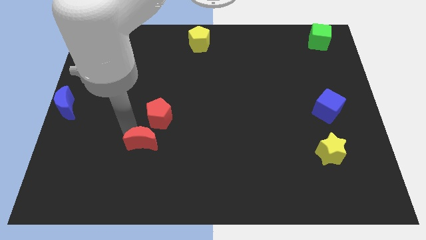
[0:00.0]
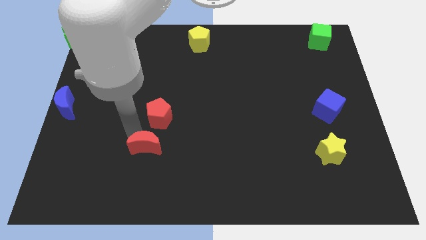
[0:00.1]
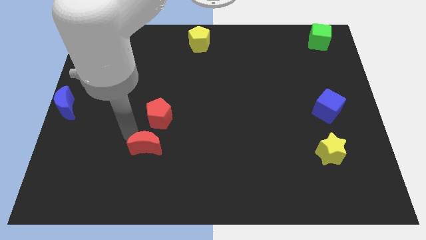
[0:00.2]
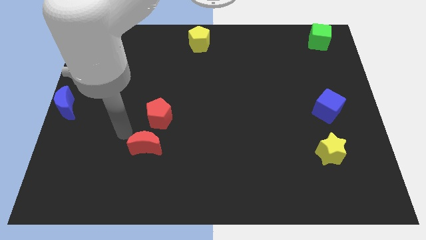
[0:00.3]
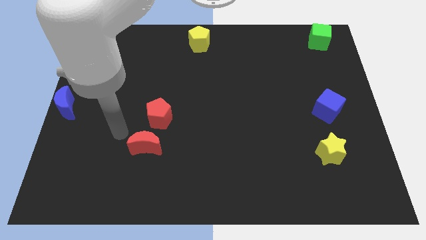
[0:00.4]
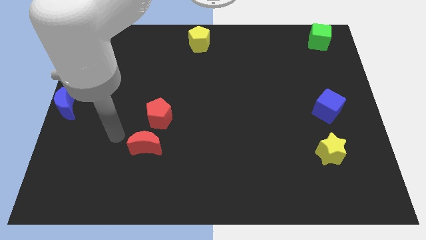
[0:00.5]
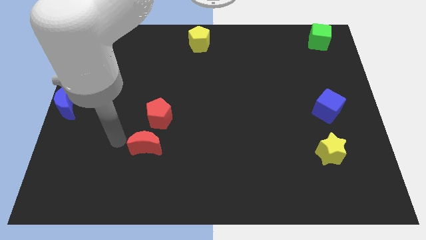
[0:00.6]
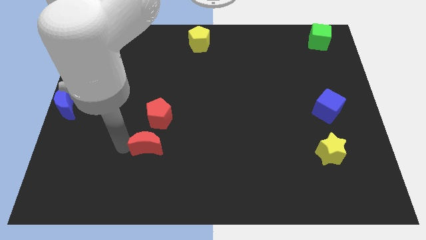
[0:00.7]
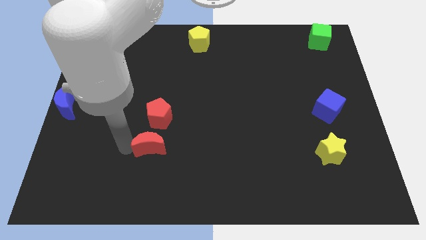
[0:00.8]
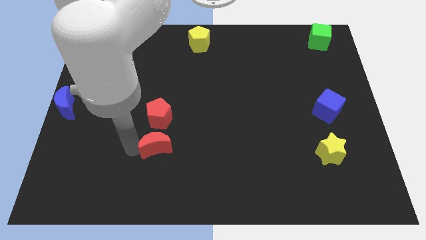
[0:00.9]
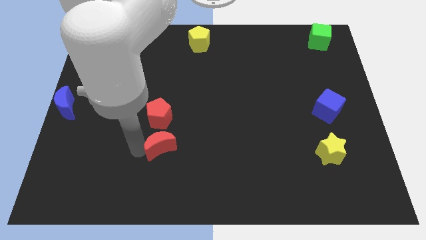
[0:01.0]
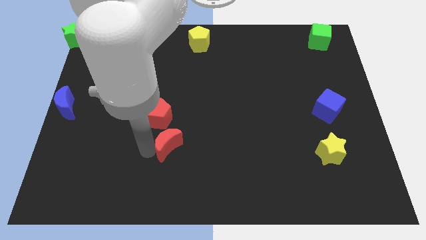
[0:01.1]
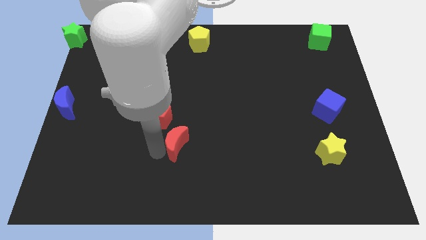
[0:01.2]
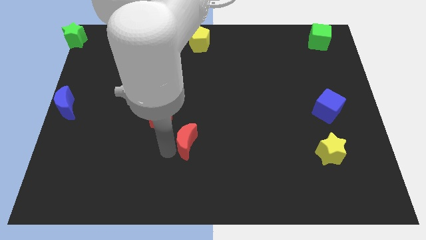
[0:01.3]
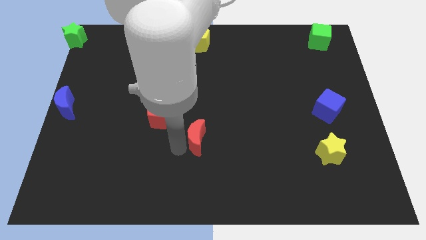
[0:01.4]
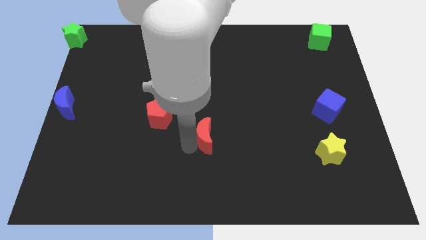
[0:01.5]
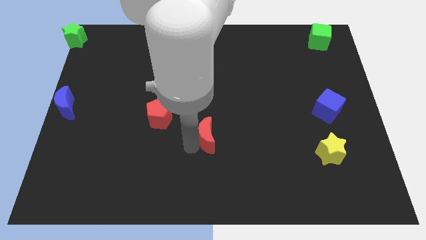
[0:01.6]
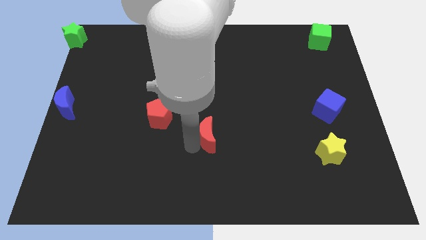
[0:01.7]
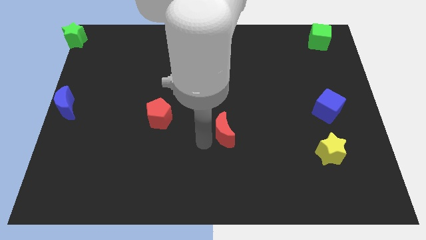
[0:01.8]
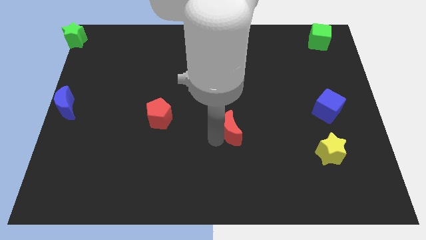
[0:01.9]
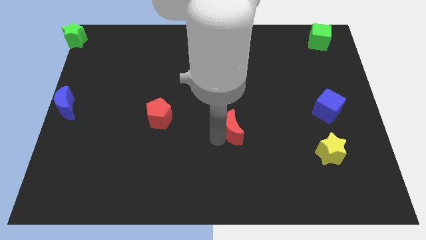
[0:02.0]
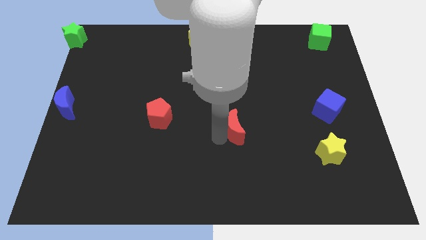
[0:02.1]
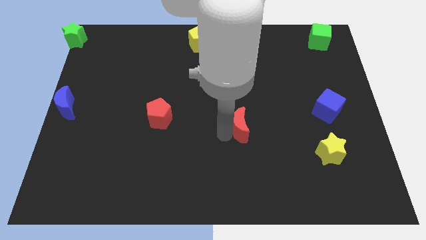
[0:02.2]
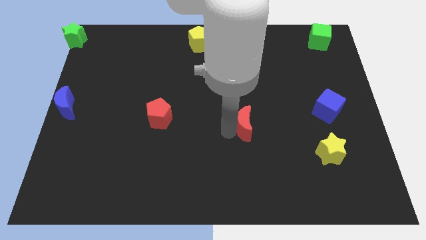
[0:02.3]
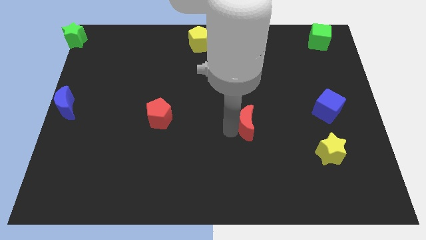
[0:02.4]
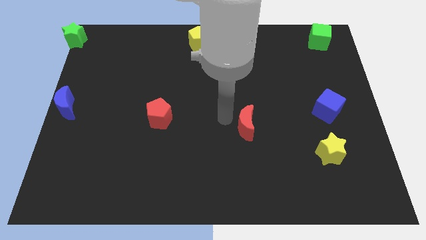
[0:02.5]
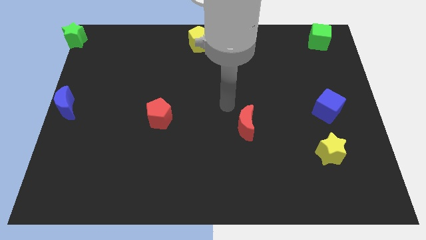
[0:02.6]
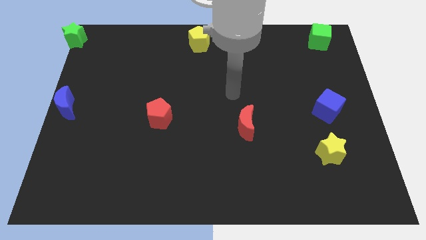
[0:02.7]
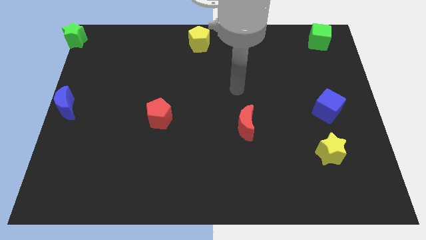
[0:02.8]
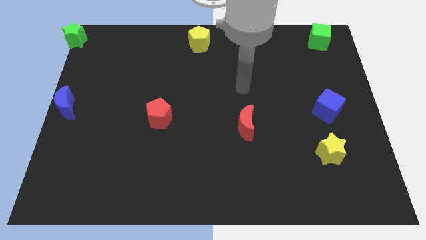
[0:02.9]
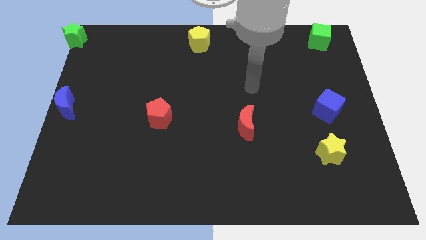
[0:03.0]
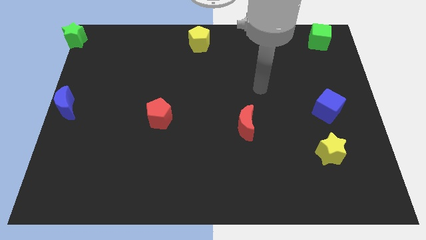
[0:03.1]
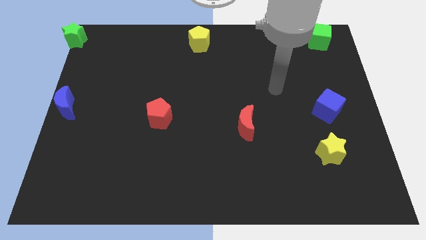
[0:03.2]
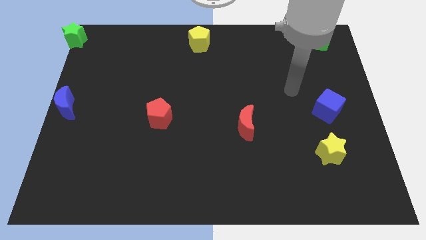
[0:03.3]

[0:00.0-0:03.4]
place the red crescent to the right of the red pentagon

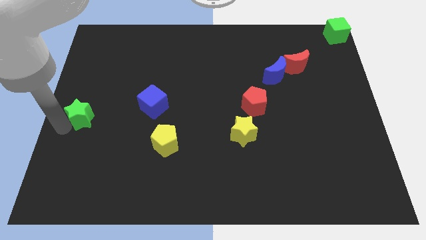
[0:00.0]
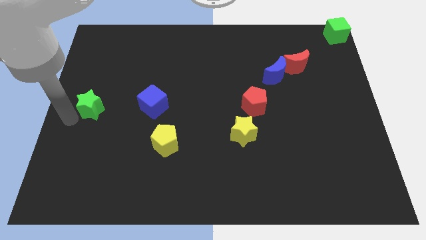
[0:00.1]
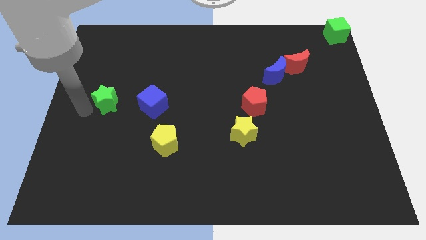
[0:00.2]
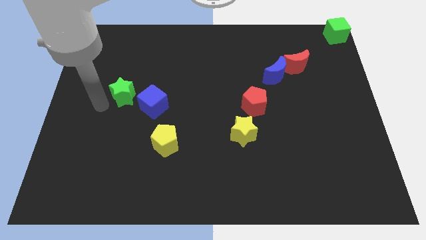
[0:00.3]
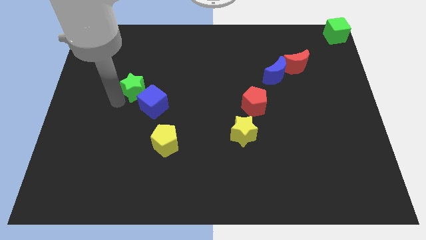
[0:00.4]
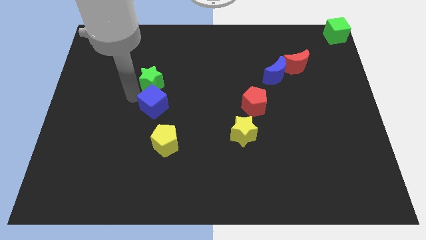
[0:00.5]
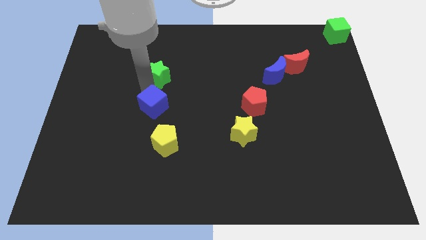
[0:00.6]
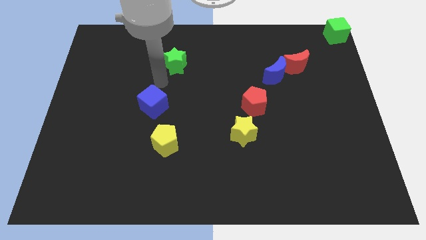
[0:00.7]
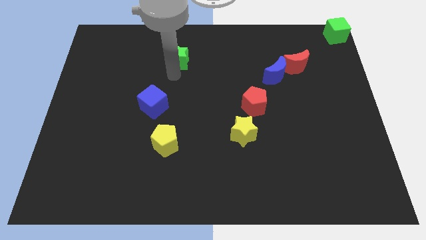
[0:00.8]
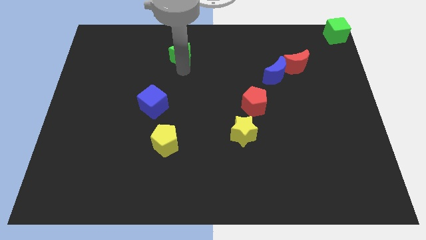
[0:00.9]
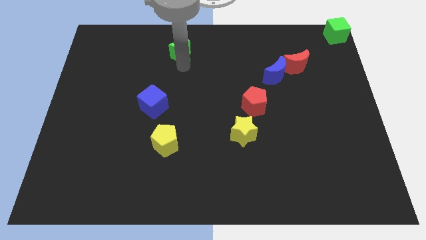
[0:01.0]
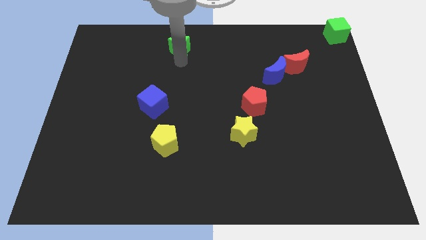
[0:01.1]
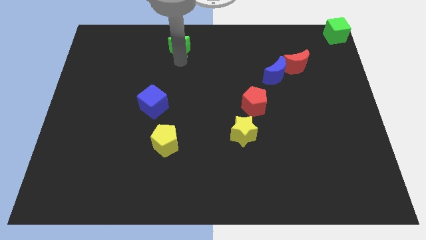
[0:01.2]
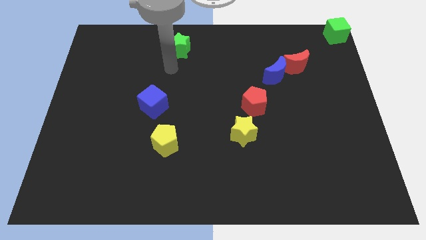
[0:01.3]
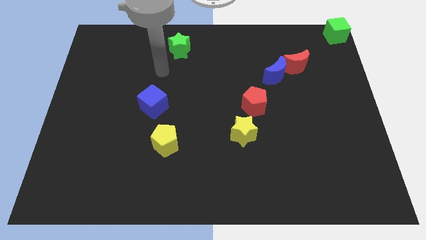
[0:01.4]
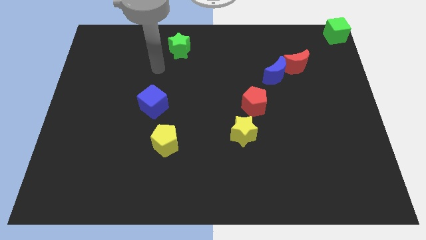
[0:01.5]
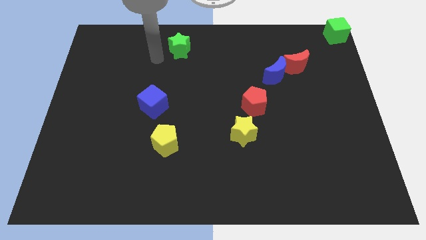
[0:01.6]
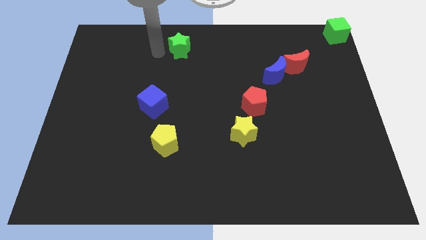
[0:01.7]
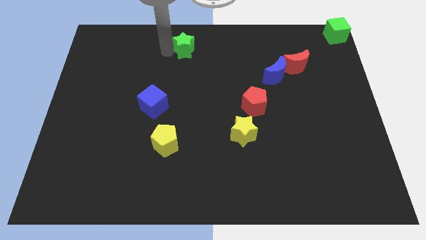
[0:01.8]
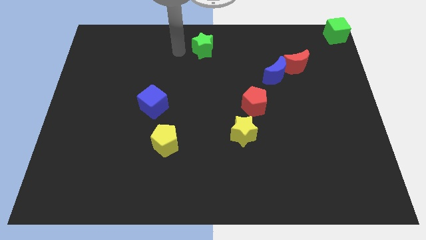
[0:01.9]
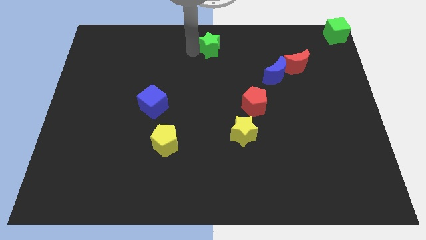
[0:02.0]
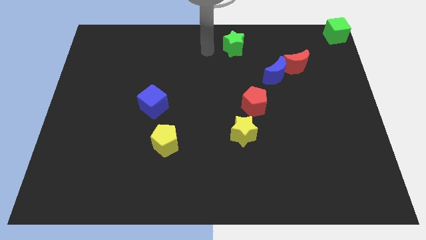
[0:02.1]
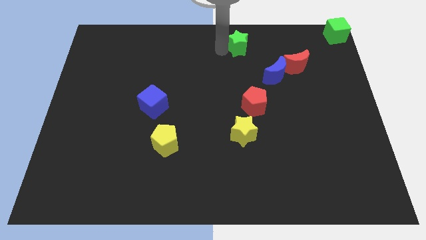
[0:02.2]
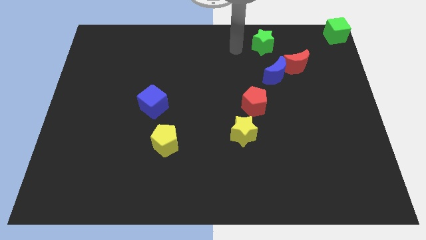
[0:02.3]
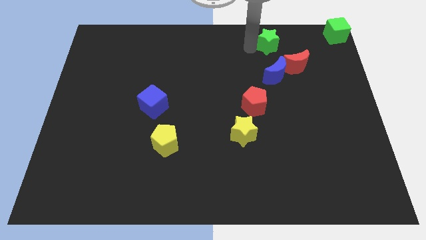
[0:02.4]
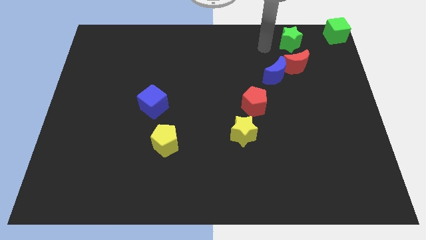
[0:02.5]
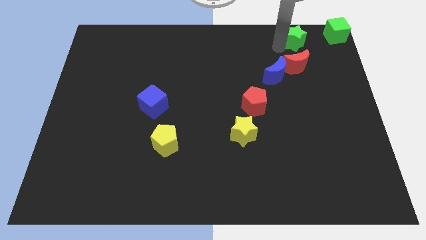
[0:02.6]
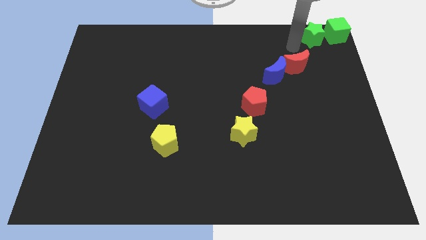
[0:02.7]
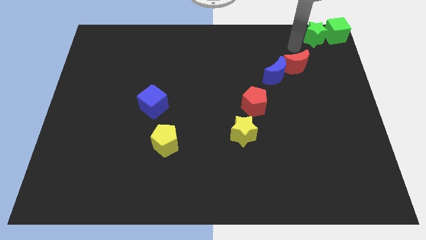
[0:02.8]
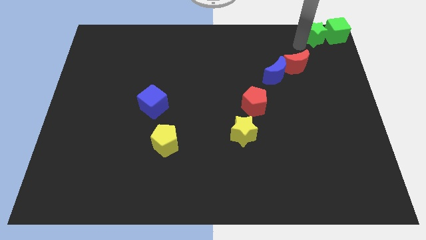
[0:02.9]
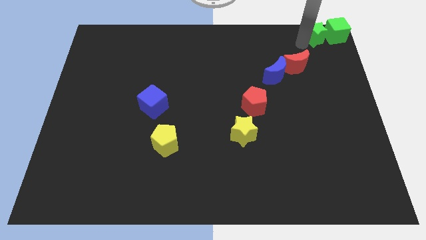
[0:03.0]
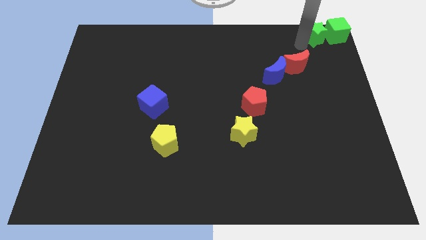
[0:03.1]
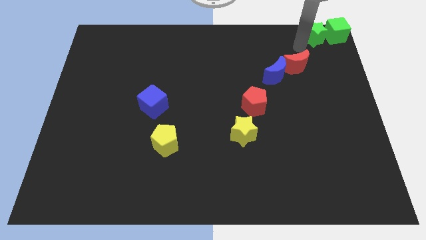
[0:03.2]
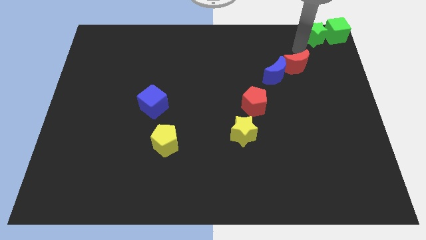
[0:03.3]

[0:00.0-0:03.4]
move the green star to the left side of the green cube

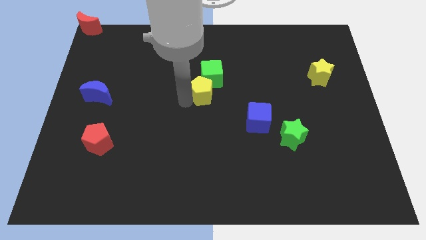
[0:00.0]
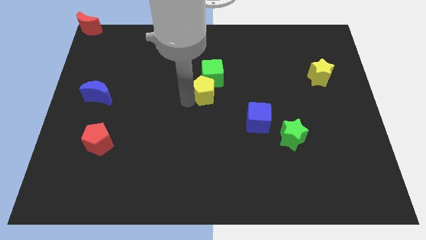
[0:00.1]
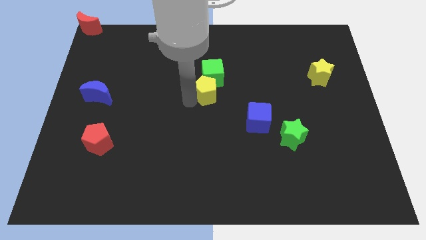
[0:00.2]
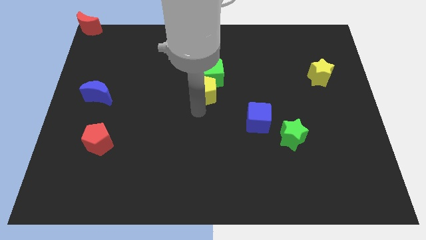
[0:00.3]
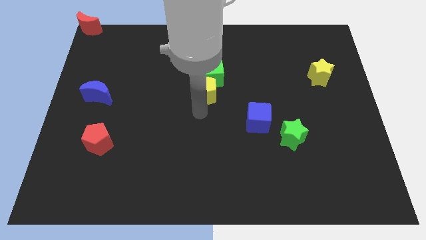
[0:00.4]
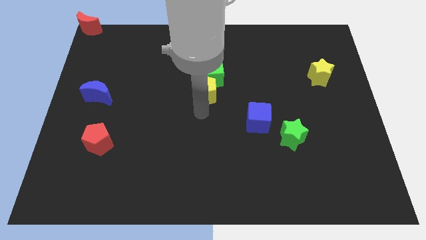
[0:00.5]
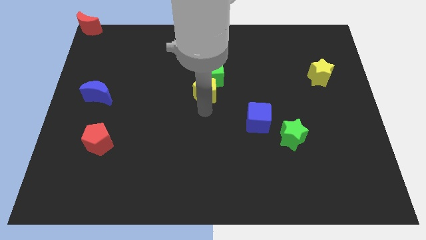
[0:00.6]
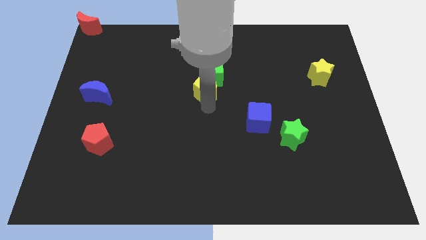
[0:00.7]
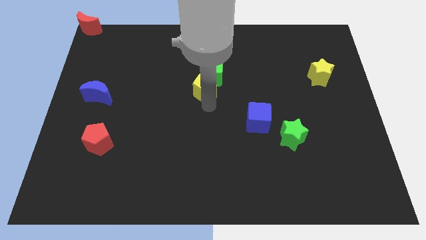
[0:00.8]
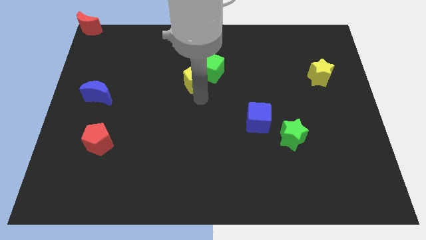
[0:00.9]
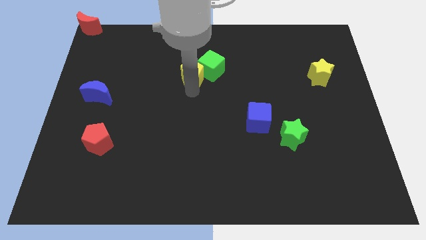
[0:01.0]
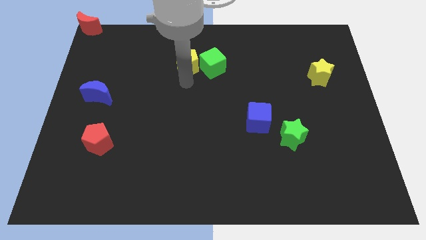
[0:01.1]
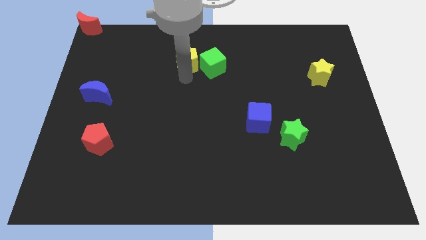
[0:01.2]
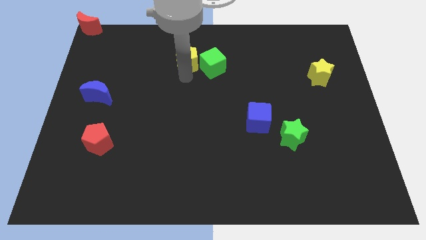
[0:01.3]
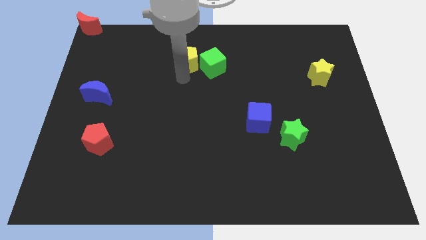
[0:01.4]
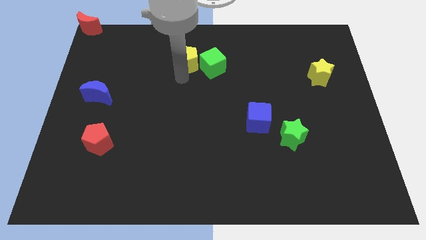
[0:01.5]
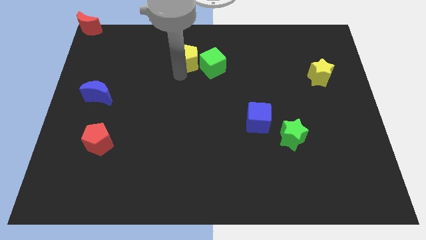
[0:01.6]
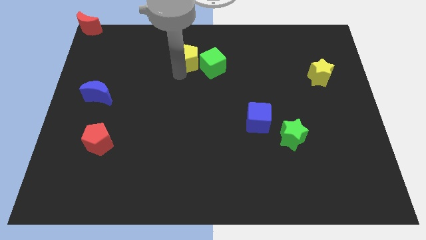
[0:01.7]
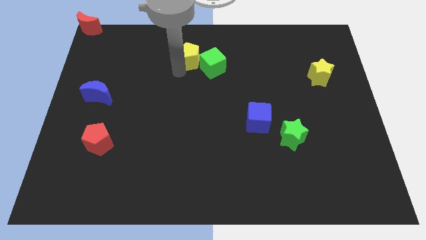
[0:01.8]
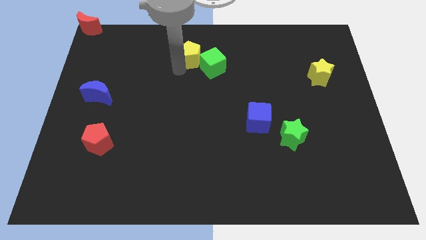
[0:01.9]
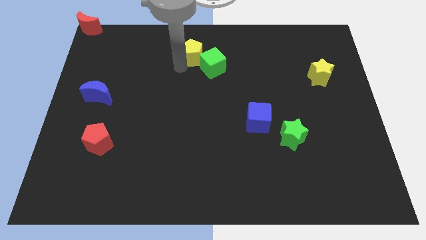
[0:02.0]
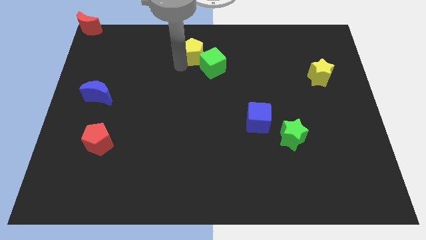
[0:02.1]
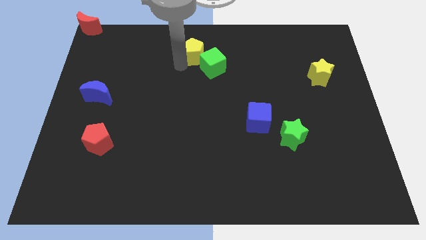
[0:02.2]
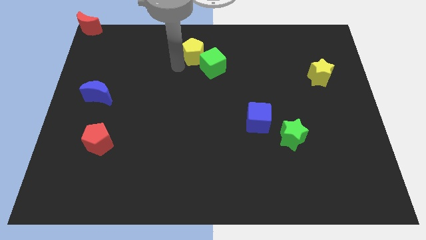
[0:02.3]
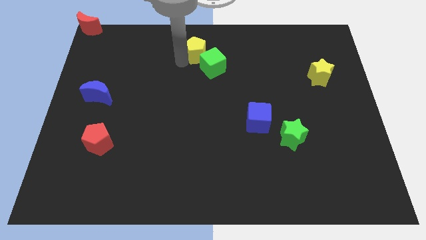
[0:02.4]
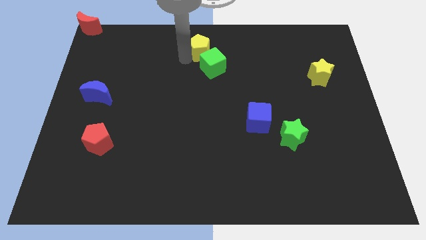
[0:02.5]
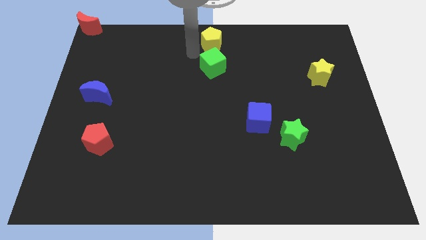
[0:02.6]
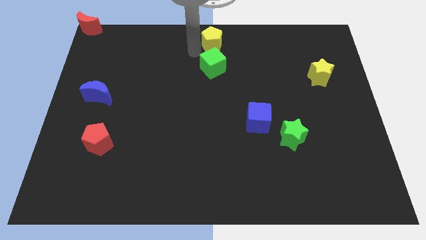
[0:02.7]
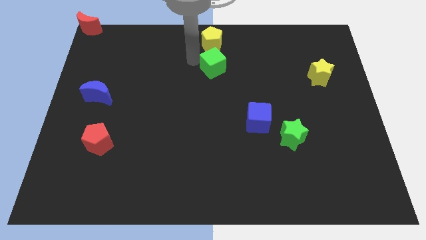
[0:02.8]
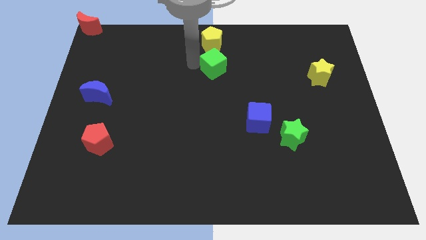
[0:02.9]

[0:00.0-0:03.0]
push the yellow pentagon to the top center of the board
